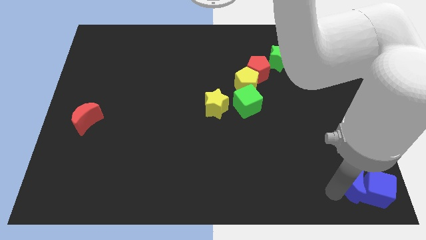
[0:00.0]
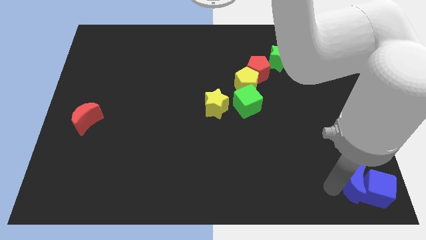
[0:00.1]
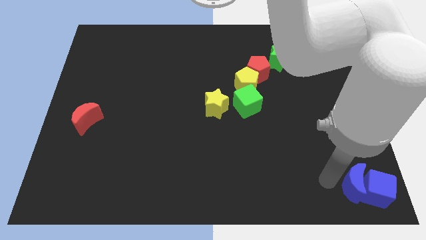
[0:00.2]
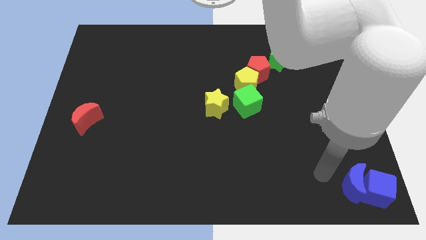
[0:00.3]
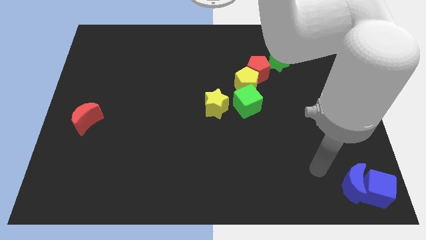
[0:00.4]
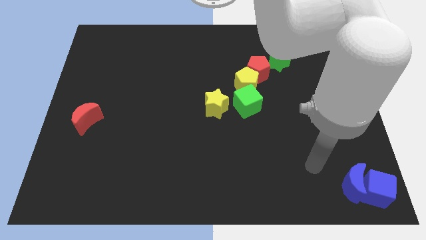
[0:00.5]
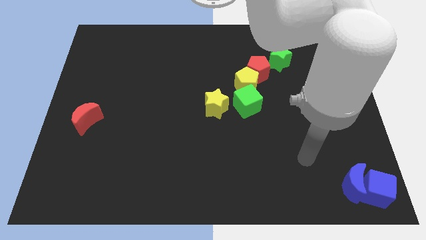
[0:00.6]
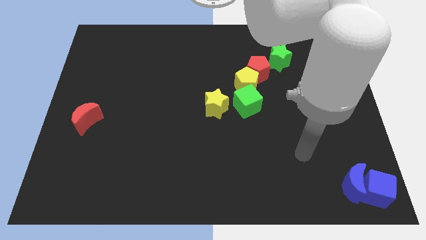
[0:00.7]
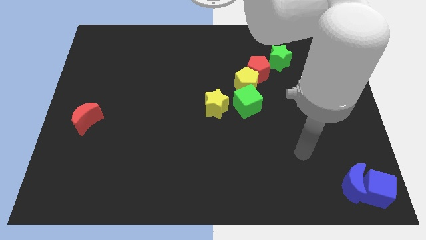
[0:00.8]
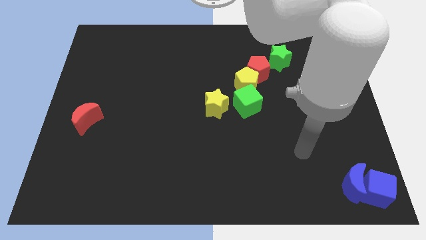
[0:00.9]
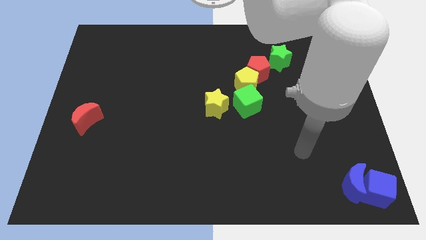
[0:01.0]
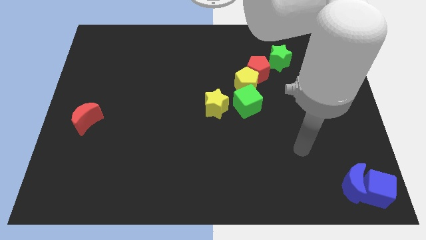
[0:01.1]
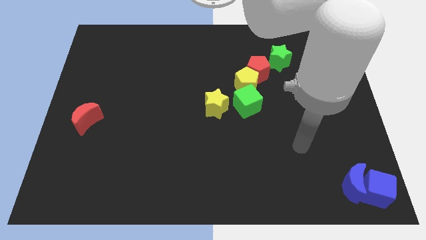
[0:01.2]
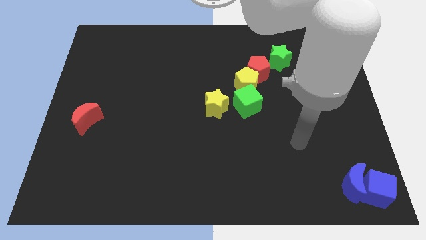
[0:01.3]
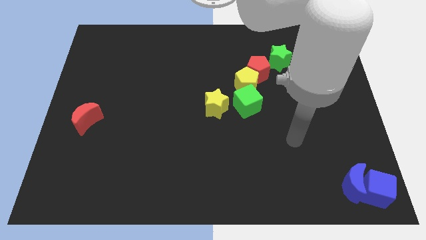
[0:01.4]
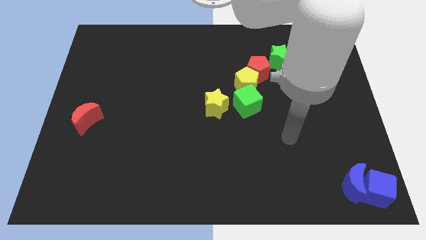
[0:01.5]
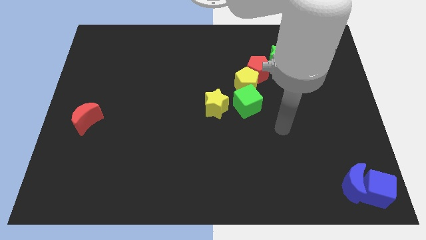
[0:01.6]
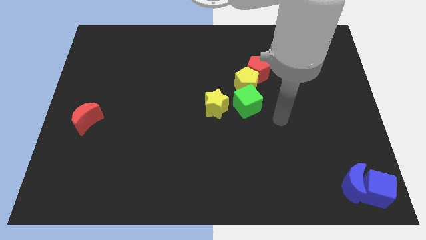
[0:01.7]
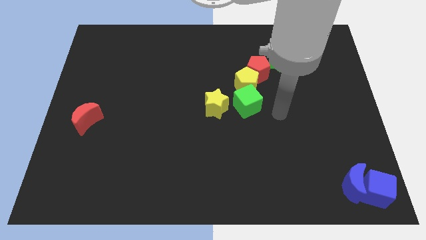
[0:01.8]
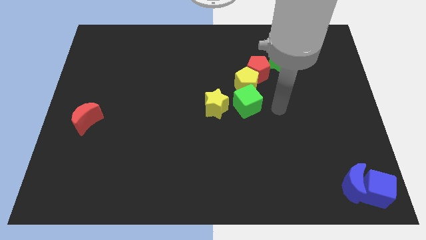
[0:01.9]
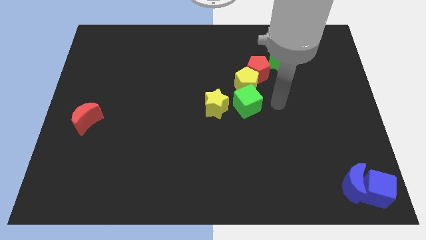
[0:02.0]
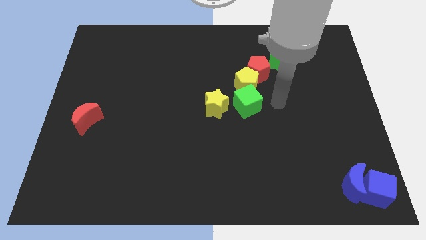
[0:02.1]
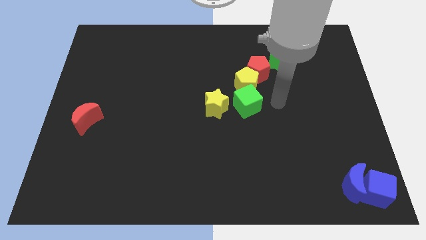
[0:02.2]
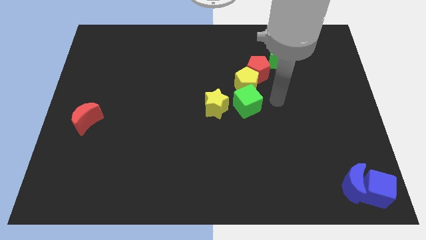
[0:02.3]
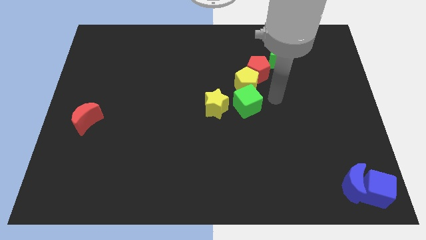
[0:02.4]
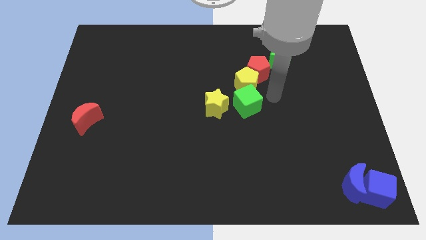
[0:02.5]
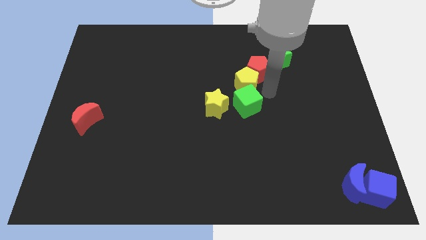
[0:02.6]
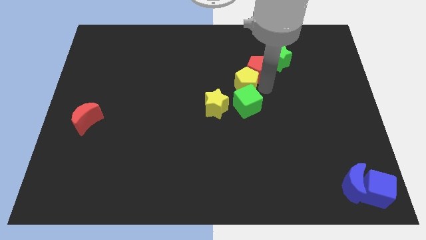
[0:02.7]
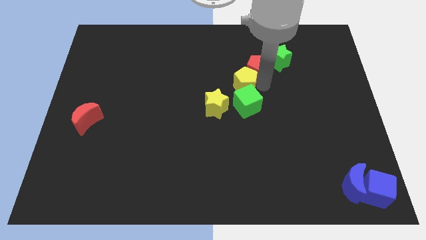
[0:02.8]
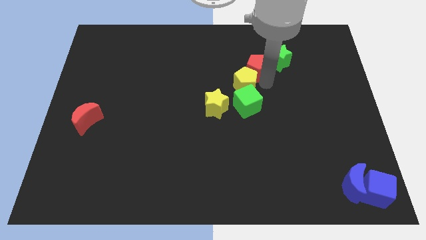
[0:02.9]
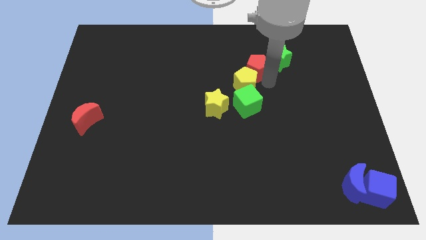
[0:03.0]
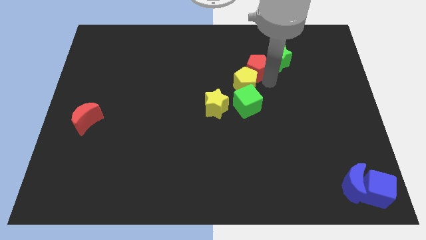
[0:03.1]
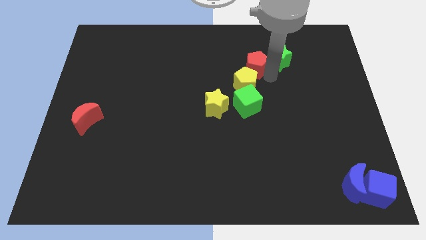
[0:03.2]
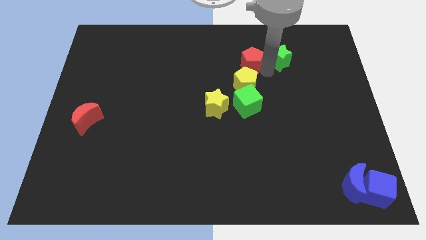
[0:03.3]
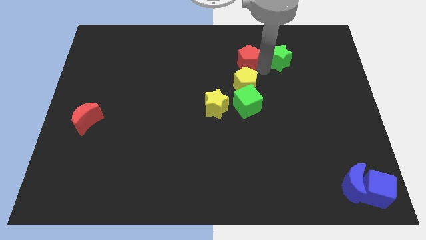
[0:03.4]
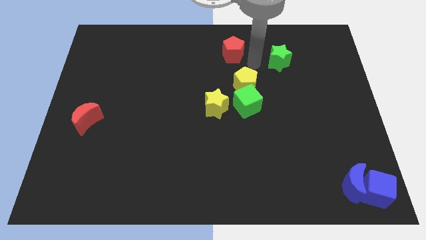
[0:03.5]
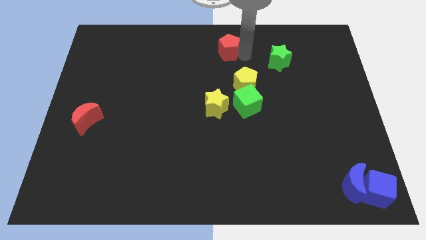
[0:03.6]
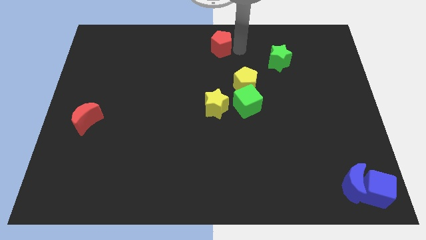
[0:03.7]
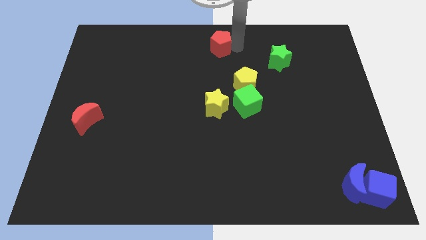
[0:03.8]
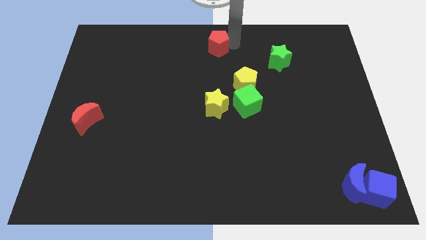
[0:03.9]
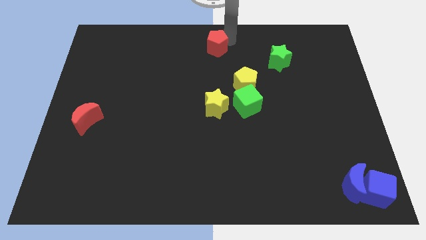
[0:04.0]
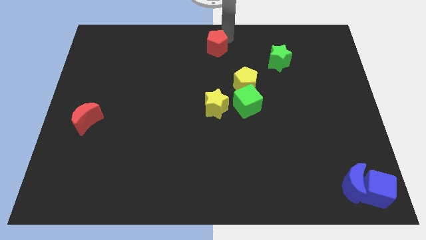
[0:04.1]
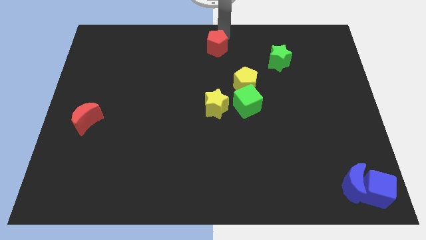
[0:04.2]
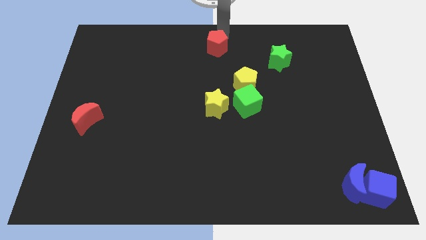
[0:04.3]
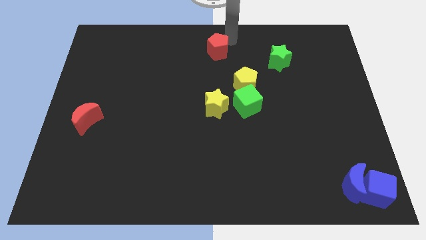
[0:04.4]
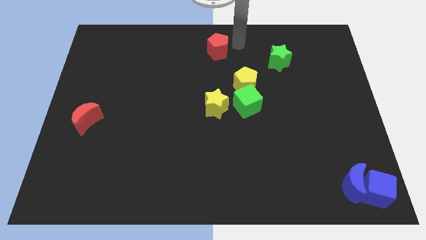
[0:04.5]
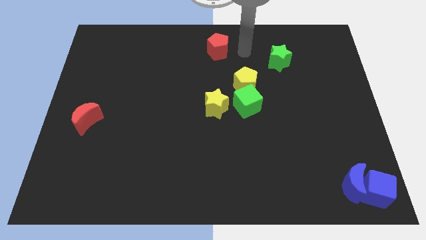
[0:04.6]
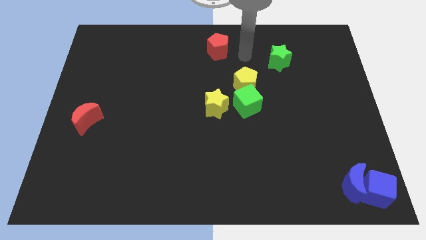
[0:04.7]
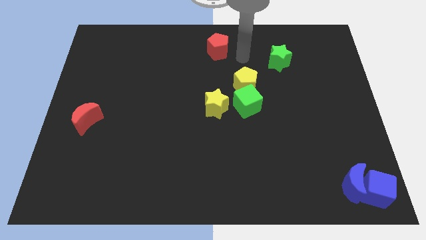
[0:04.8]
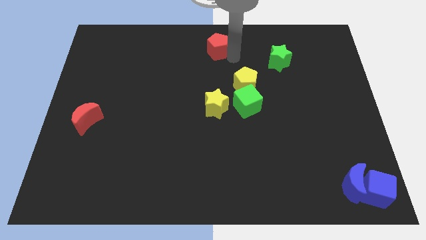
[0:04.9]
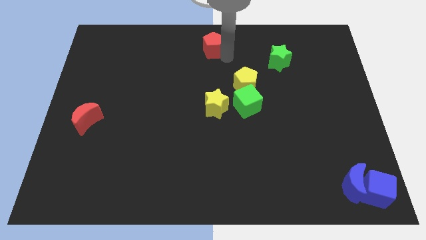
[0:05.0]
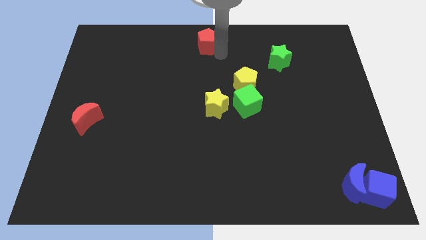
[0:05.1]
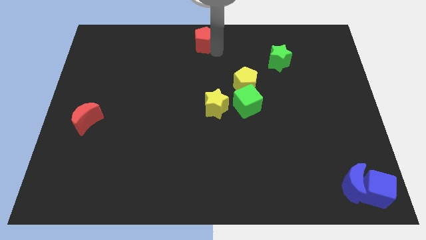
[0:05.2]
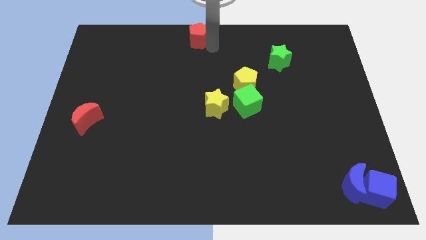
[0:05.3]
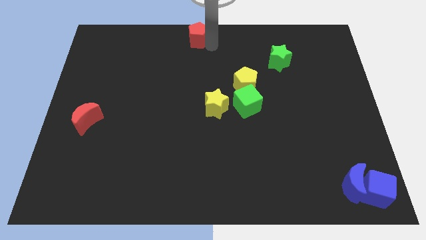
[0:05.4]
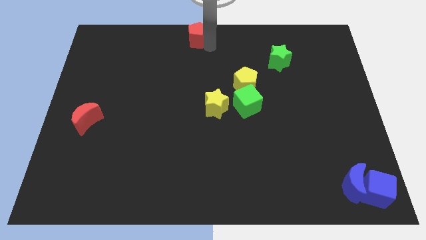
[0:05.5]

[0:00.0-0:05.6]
move the red pentagon at the top center of the table

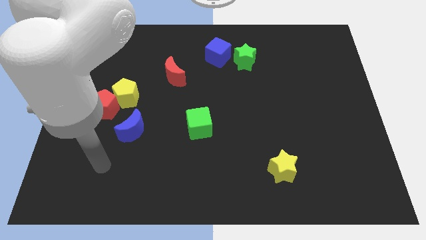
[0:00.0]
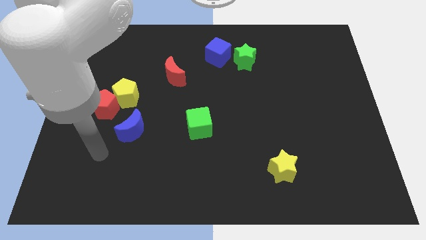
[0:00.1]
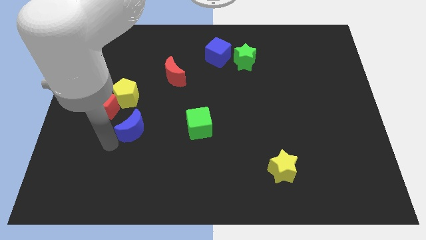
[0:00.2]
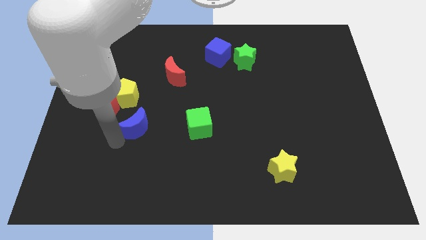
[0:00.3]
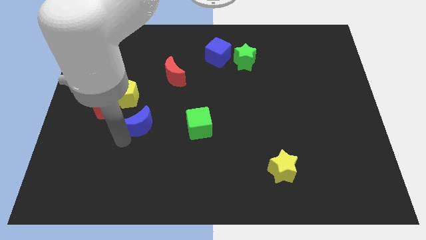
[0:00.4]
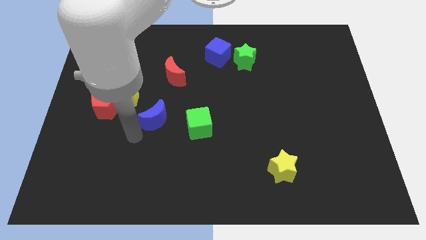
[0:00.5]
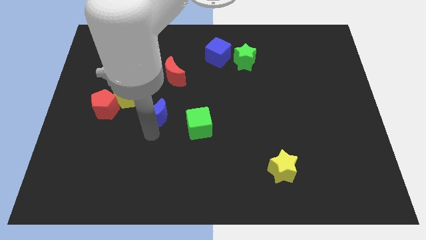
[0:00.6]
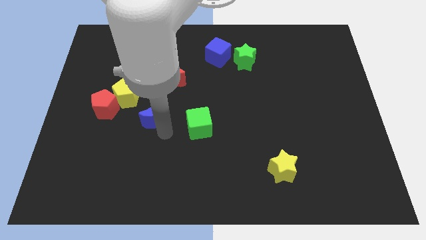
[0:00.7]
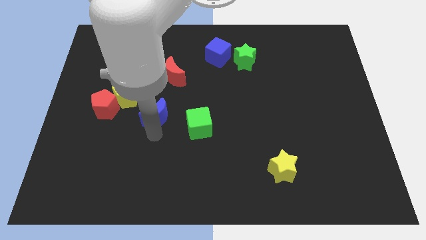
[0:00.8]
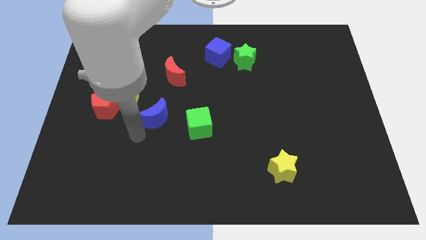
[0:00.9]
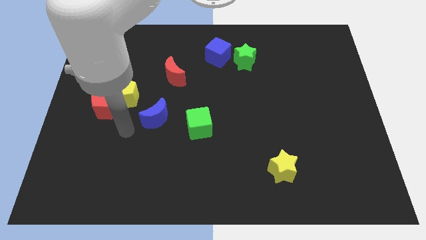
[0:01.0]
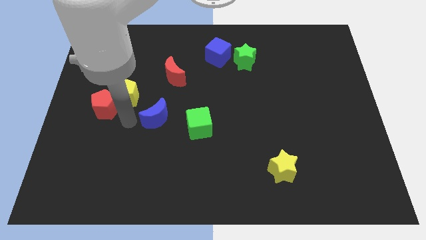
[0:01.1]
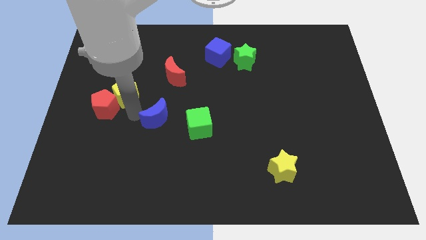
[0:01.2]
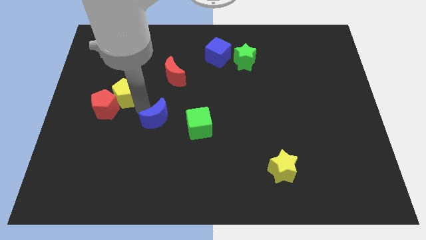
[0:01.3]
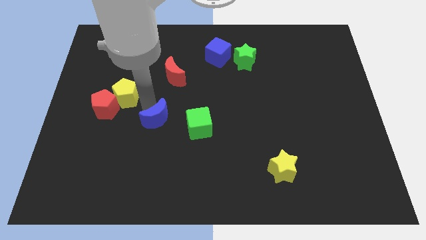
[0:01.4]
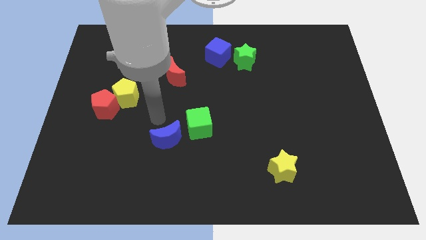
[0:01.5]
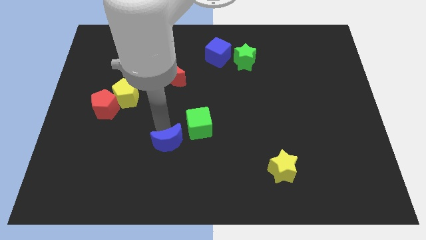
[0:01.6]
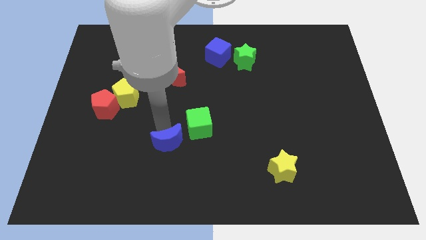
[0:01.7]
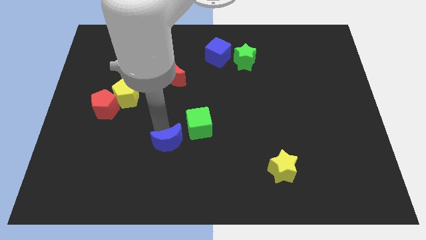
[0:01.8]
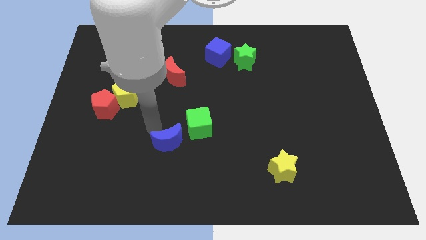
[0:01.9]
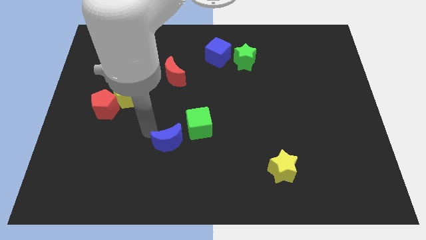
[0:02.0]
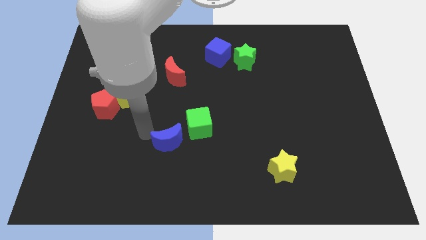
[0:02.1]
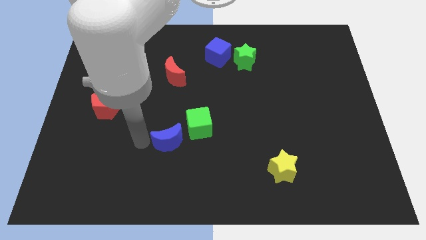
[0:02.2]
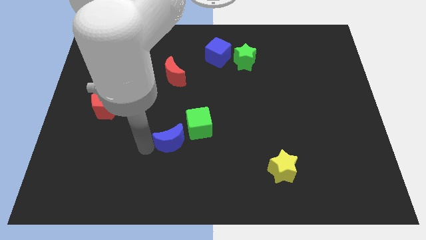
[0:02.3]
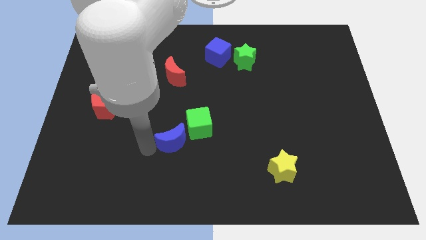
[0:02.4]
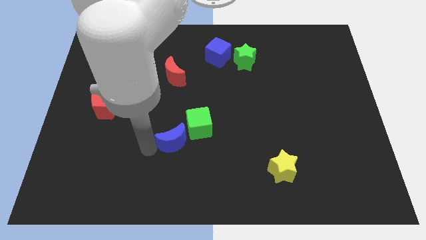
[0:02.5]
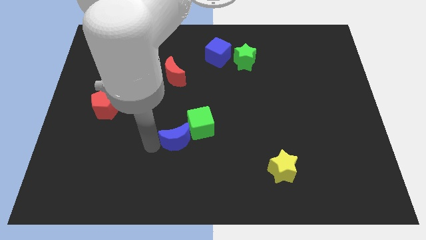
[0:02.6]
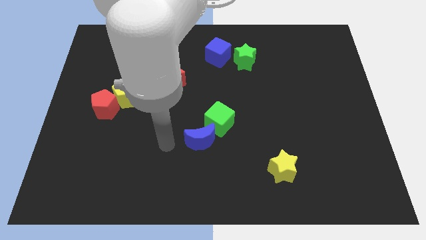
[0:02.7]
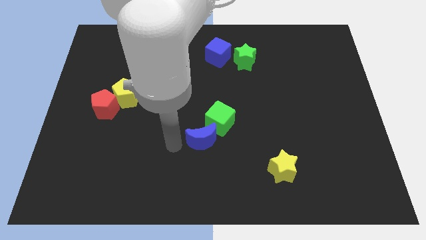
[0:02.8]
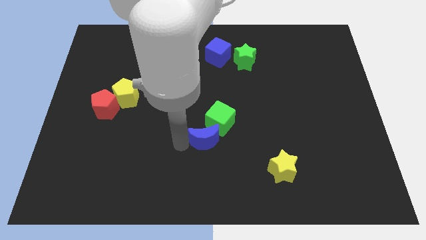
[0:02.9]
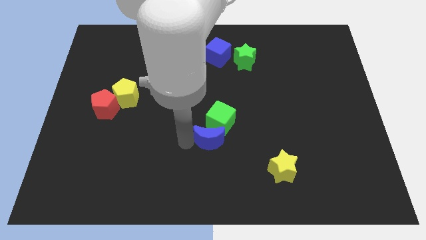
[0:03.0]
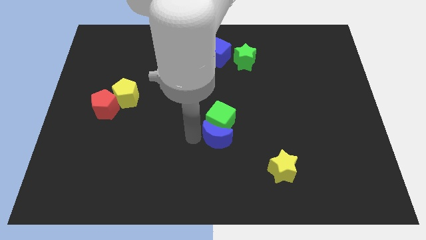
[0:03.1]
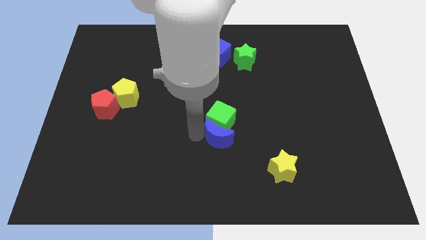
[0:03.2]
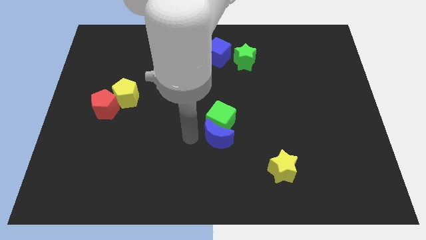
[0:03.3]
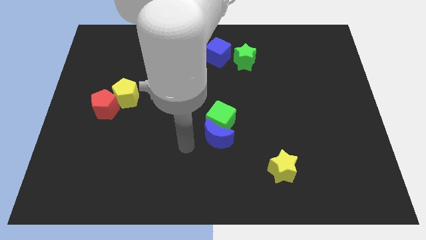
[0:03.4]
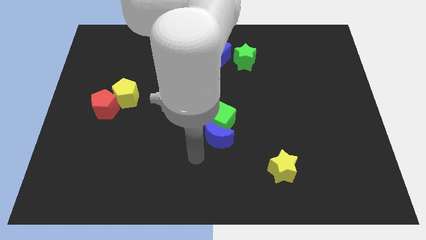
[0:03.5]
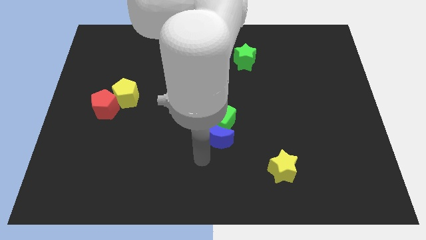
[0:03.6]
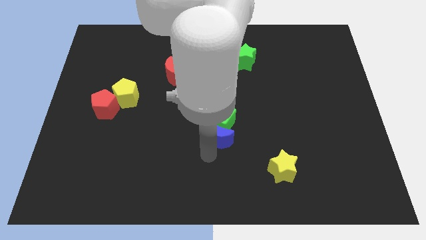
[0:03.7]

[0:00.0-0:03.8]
push the blue moon into green cube
